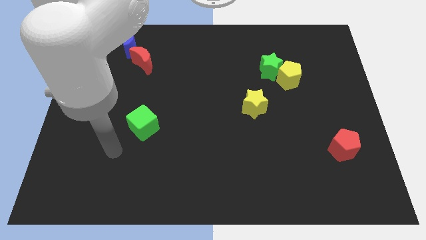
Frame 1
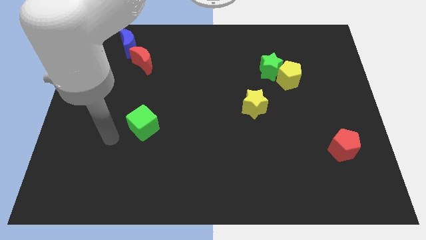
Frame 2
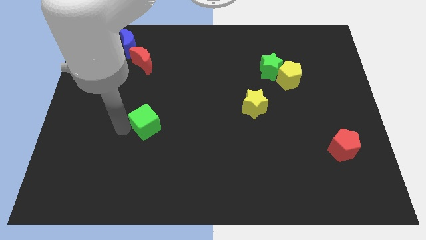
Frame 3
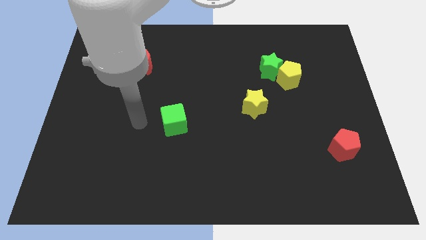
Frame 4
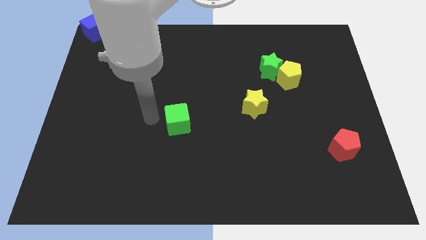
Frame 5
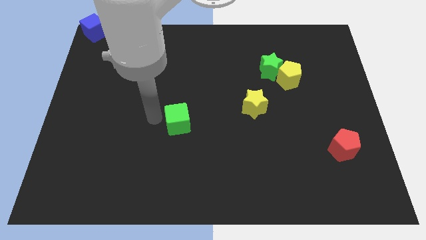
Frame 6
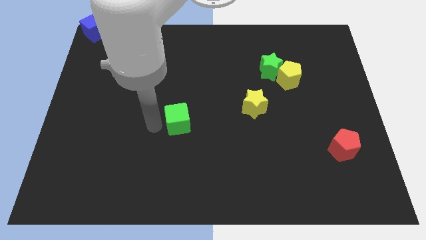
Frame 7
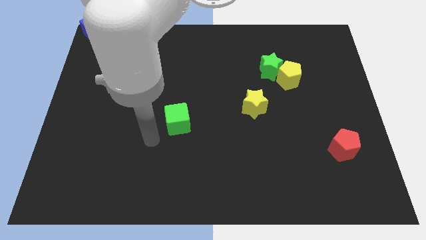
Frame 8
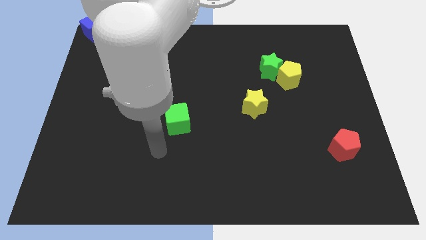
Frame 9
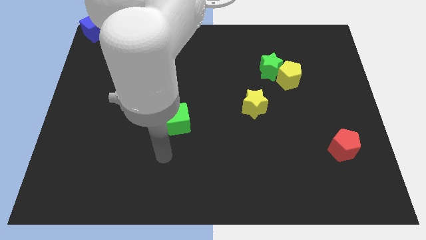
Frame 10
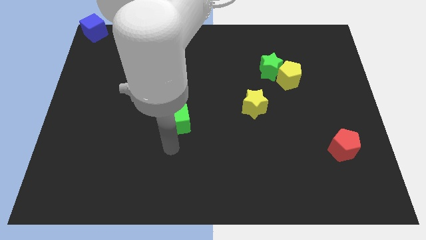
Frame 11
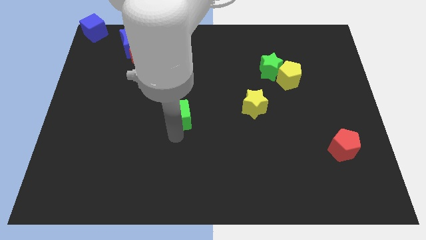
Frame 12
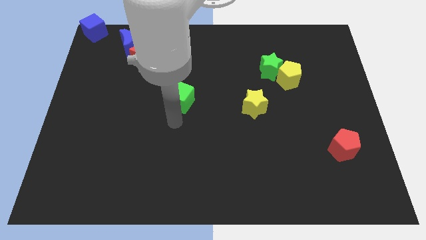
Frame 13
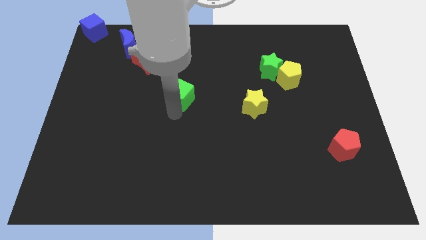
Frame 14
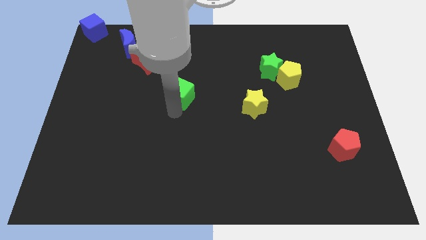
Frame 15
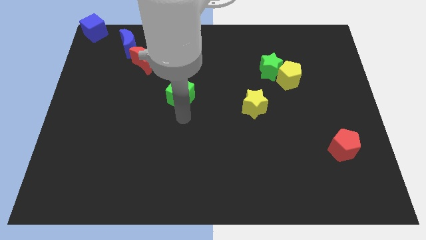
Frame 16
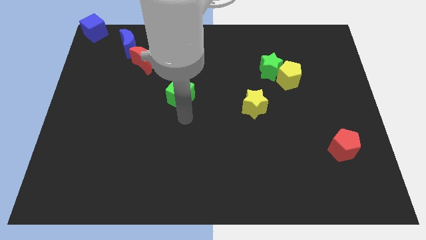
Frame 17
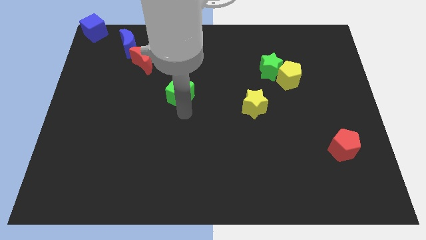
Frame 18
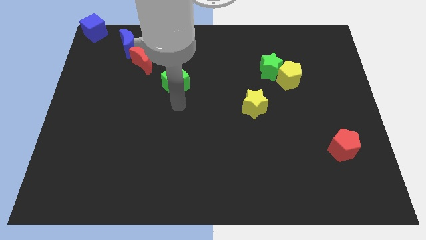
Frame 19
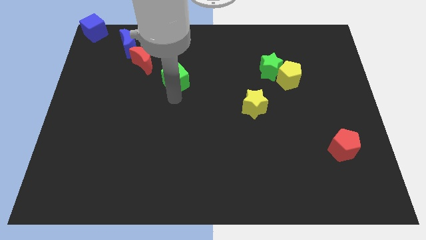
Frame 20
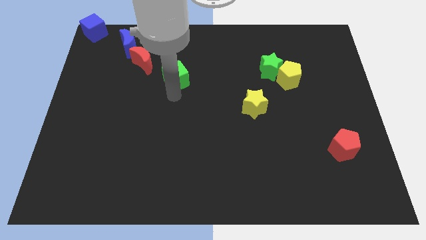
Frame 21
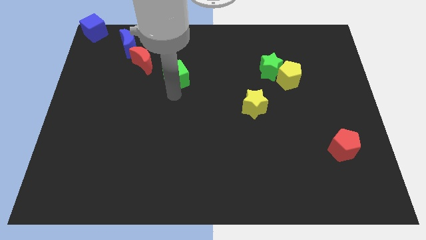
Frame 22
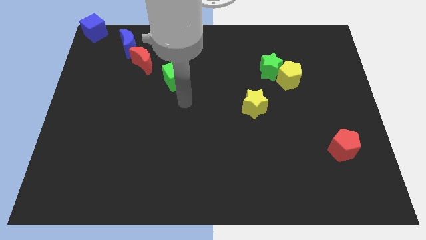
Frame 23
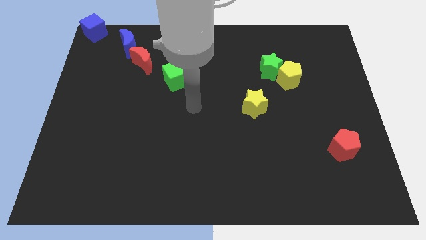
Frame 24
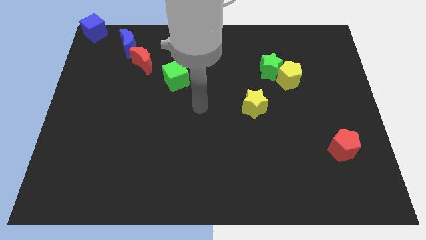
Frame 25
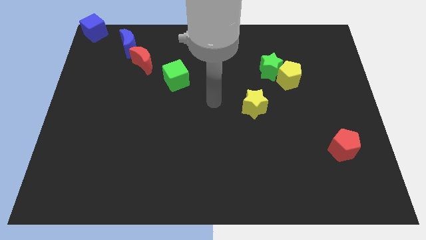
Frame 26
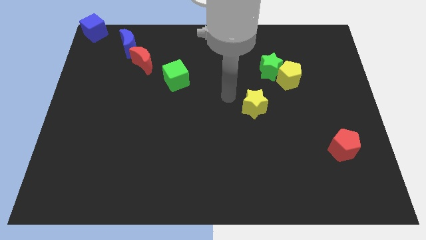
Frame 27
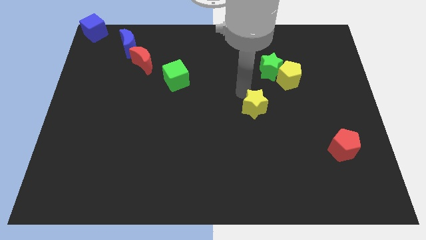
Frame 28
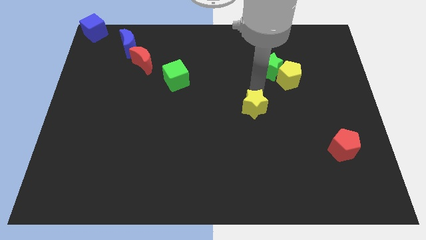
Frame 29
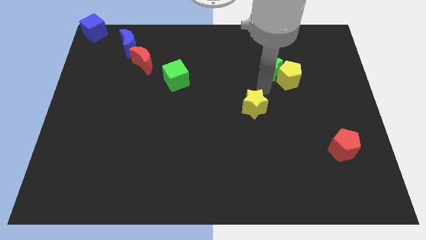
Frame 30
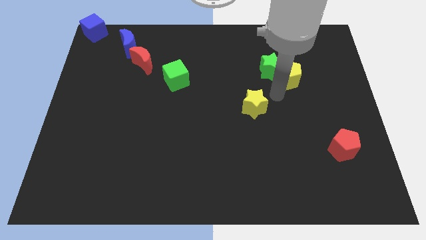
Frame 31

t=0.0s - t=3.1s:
move the green cube to the bottom right to the red crescent

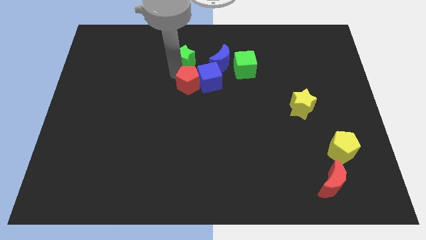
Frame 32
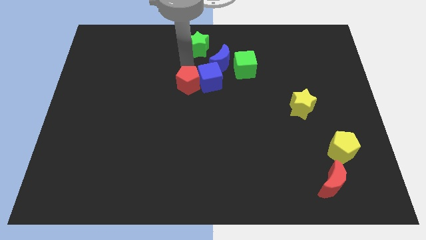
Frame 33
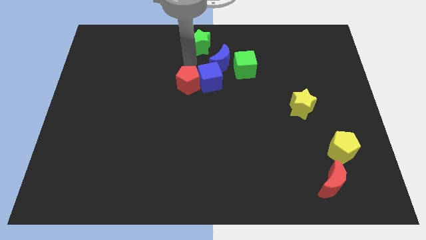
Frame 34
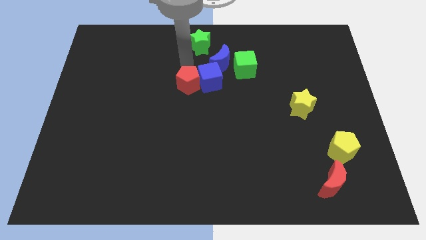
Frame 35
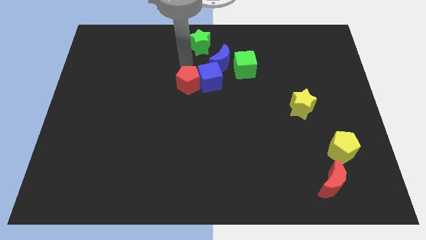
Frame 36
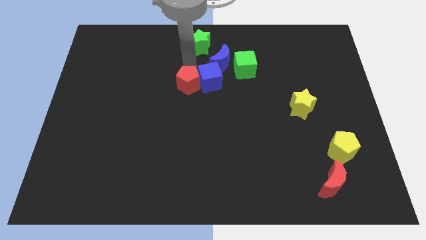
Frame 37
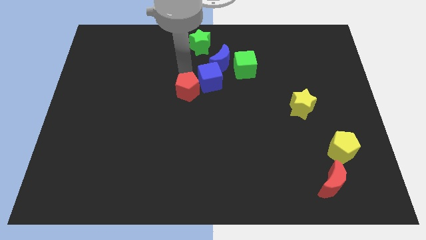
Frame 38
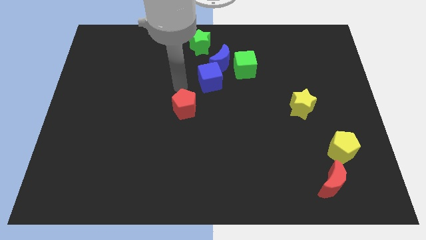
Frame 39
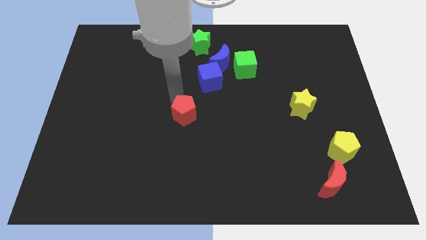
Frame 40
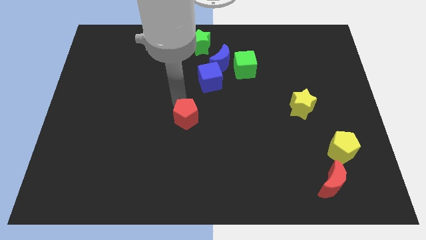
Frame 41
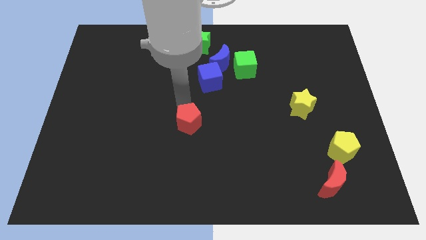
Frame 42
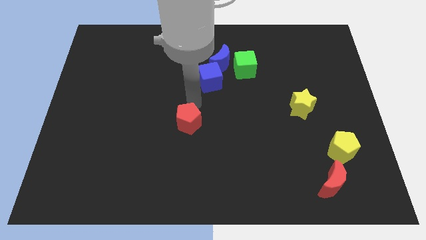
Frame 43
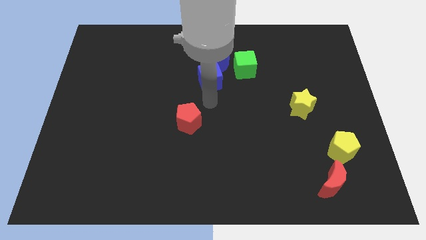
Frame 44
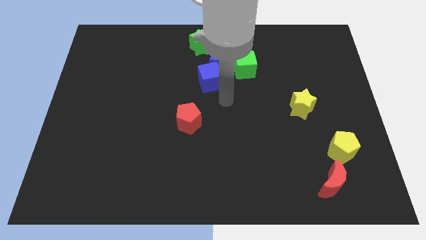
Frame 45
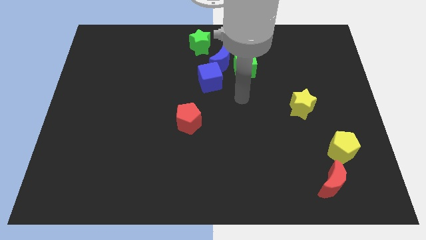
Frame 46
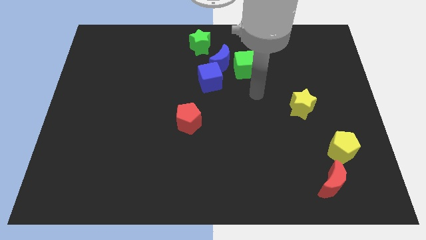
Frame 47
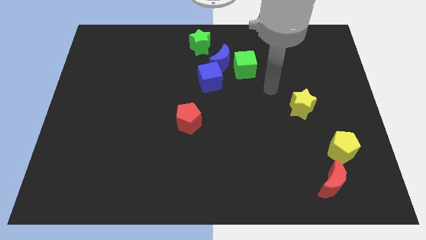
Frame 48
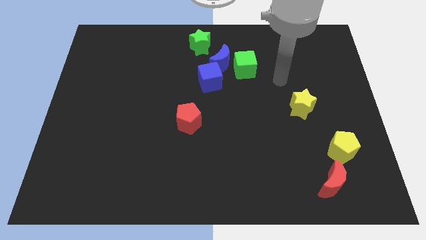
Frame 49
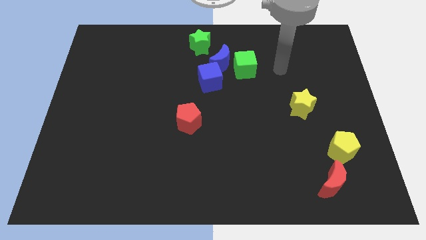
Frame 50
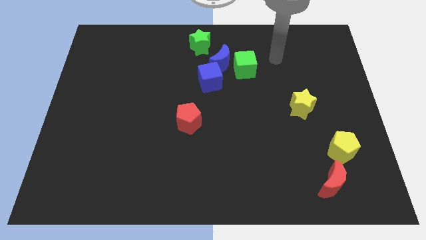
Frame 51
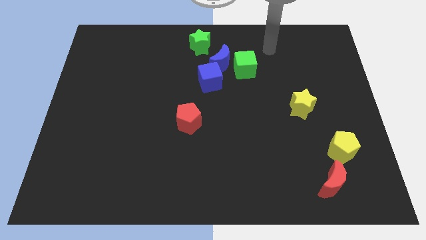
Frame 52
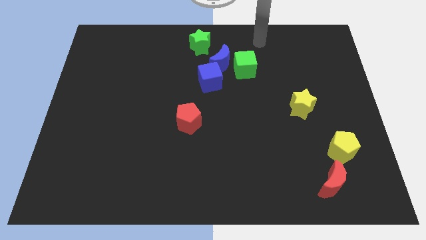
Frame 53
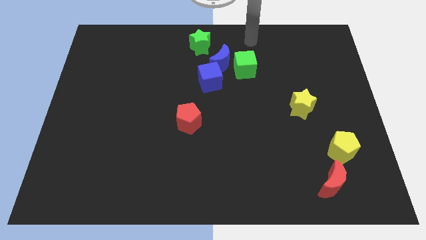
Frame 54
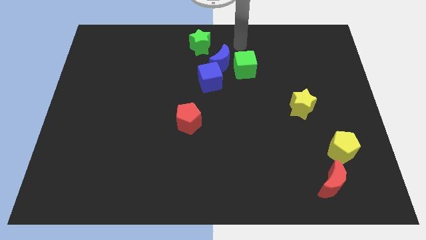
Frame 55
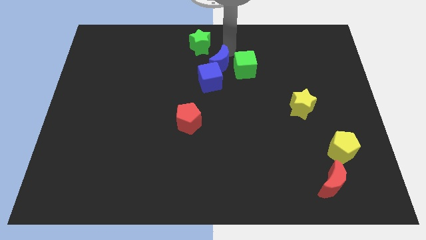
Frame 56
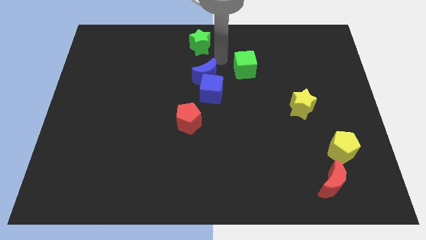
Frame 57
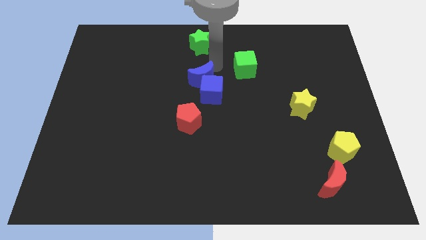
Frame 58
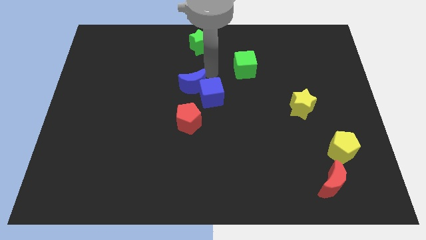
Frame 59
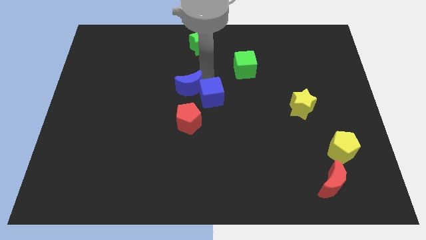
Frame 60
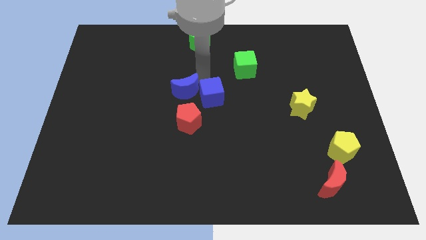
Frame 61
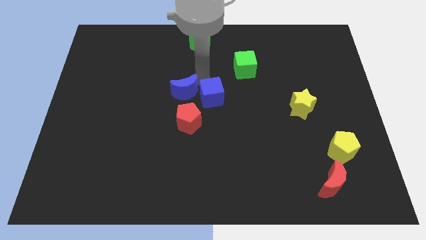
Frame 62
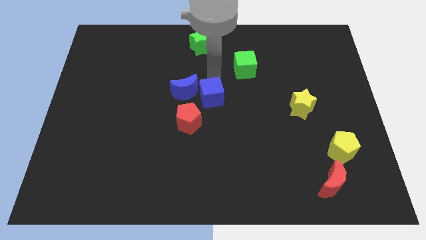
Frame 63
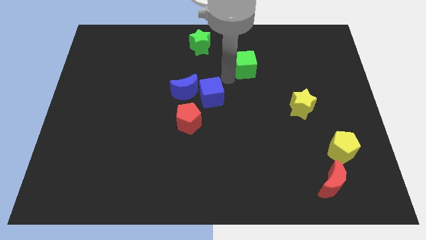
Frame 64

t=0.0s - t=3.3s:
place the blue blocks above the red pentagon

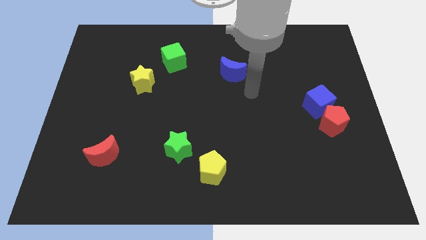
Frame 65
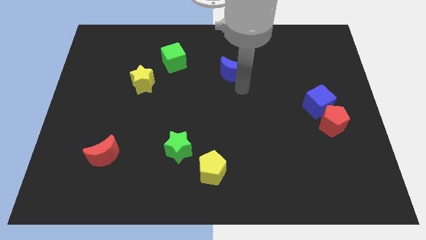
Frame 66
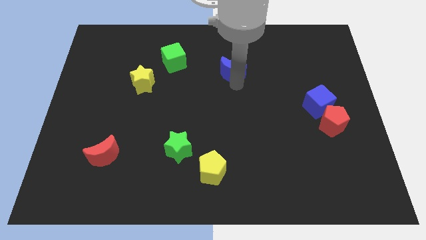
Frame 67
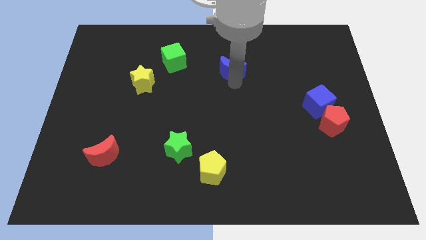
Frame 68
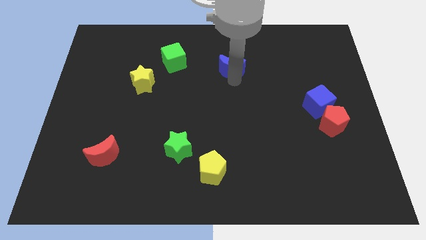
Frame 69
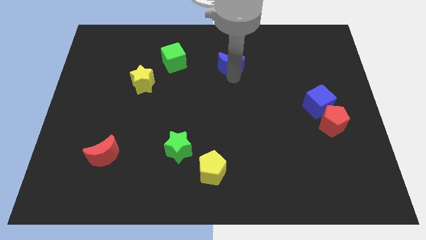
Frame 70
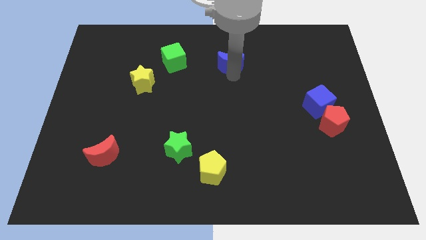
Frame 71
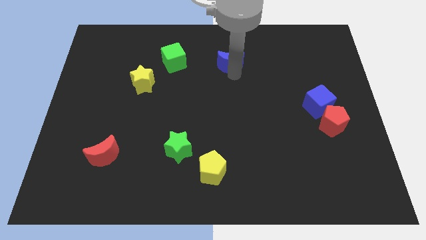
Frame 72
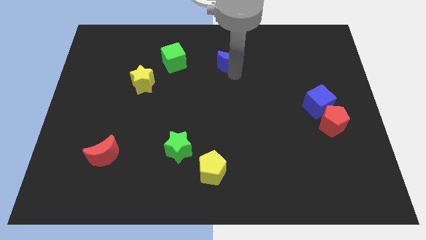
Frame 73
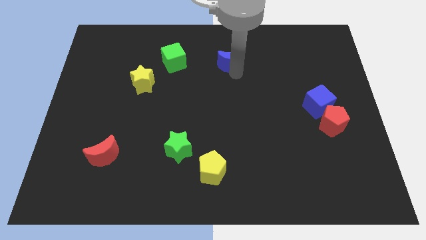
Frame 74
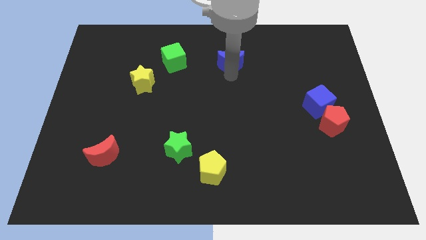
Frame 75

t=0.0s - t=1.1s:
push the blue moon slightly towards the top

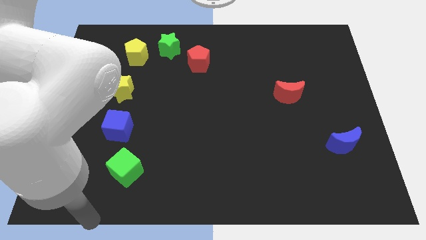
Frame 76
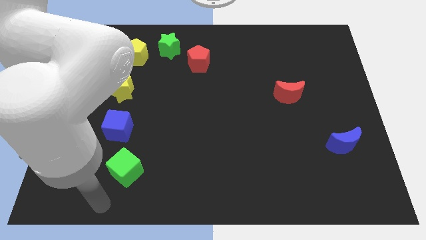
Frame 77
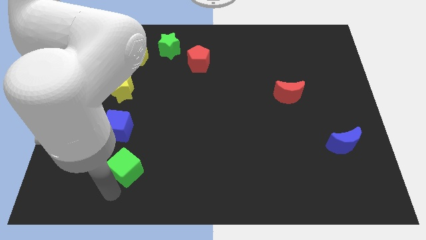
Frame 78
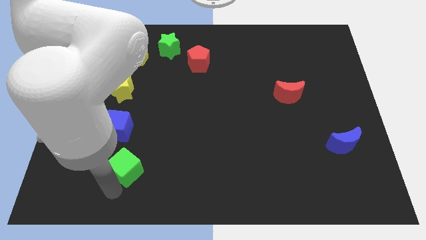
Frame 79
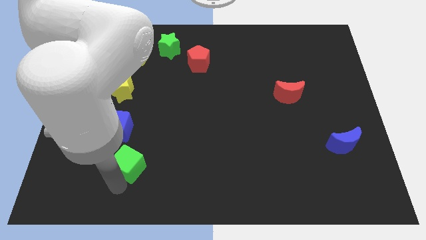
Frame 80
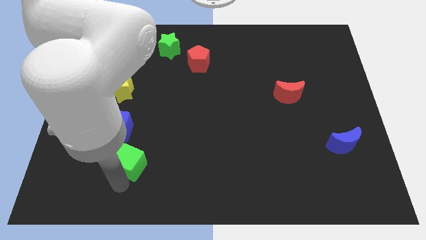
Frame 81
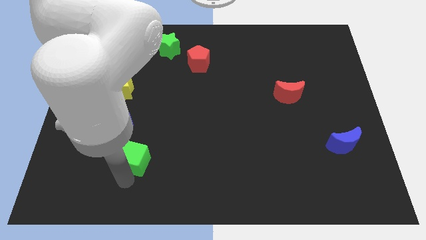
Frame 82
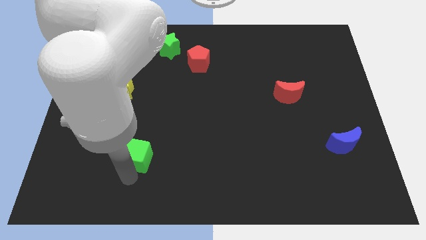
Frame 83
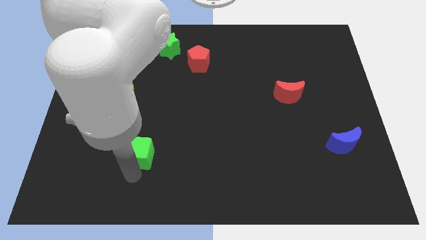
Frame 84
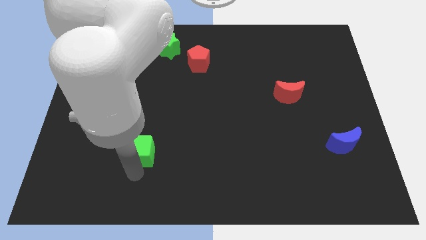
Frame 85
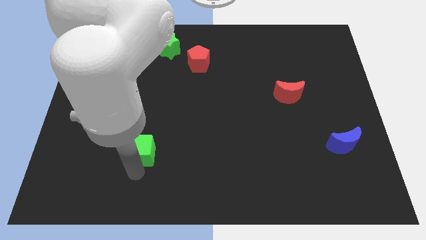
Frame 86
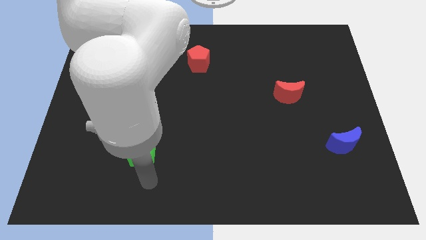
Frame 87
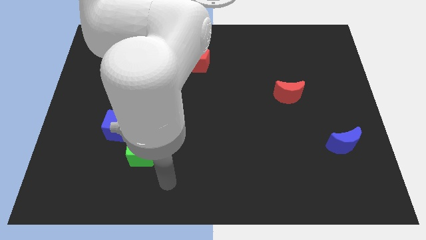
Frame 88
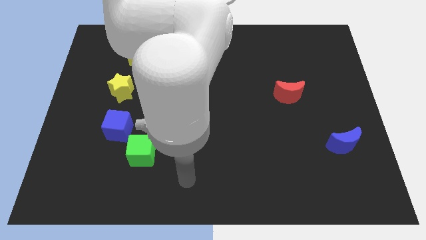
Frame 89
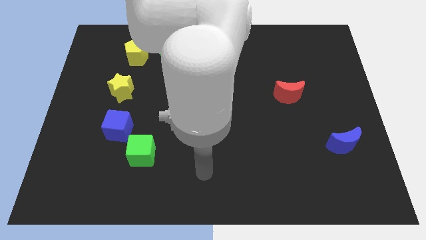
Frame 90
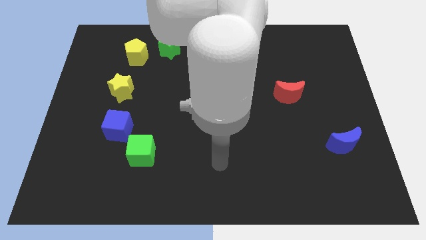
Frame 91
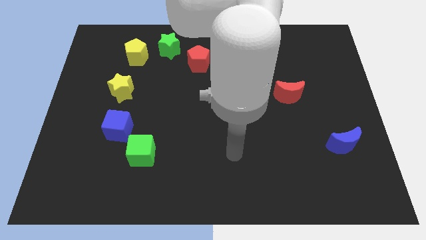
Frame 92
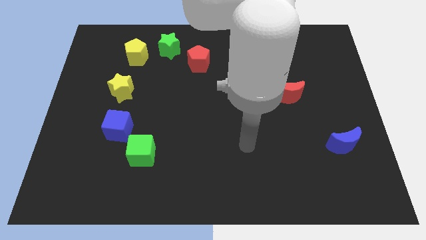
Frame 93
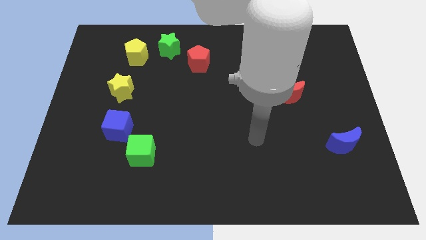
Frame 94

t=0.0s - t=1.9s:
push the green cube to the bottom right blue cube
